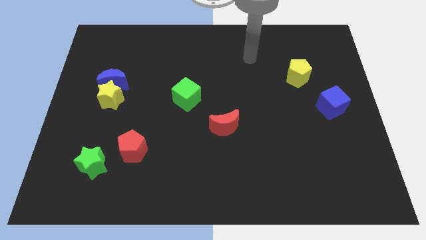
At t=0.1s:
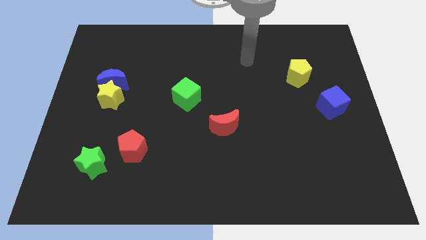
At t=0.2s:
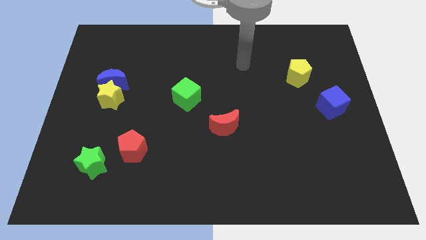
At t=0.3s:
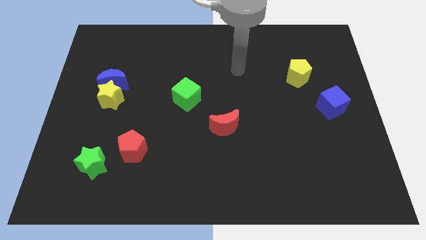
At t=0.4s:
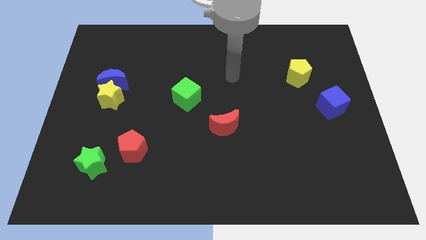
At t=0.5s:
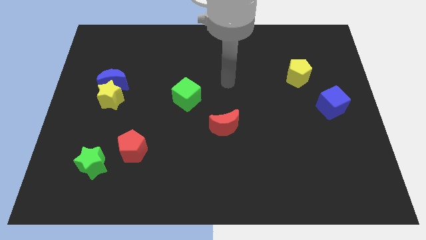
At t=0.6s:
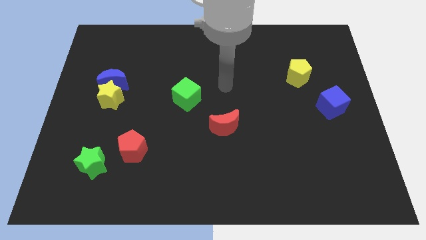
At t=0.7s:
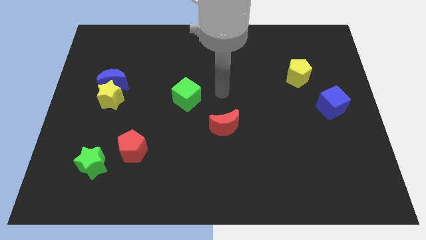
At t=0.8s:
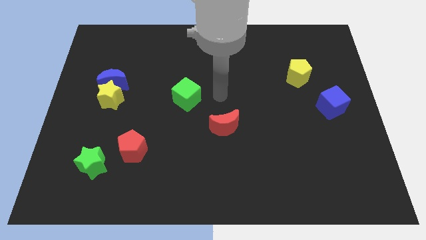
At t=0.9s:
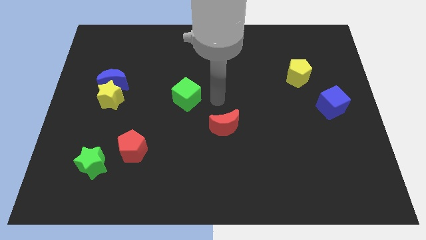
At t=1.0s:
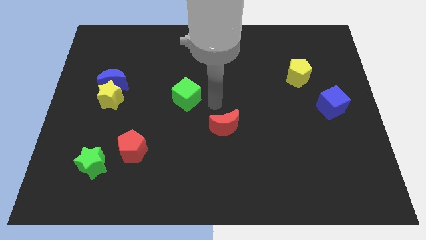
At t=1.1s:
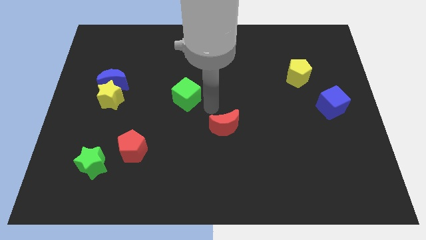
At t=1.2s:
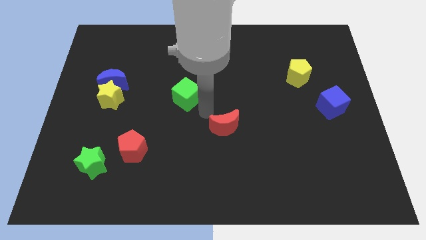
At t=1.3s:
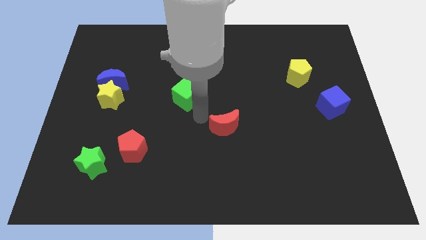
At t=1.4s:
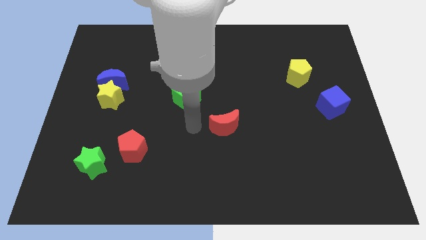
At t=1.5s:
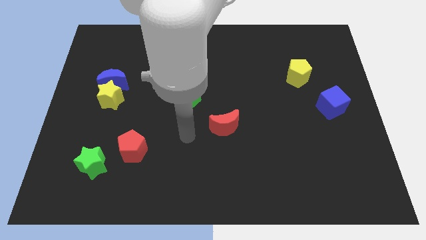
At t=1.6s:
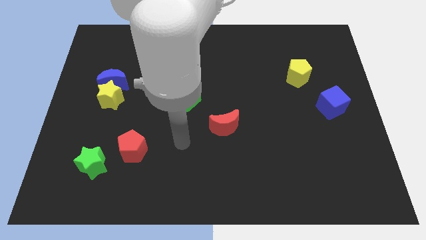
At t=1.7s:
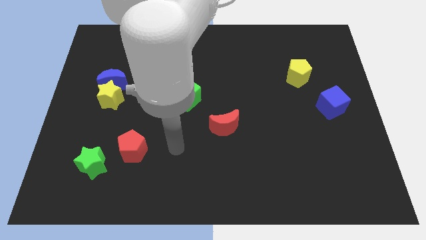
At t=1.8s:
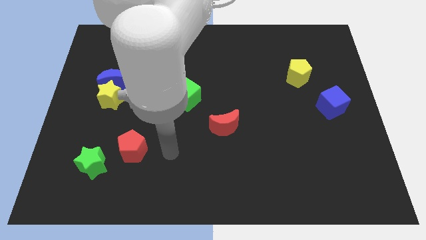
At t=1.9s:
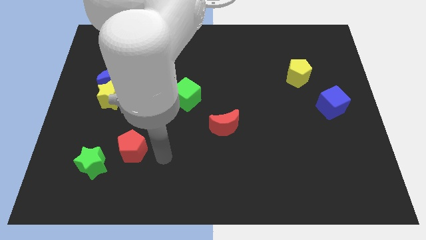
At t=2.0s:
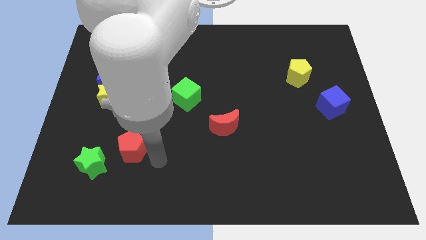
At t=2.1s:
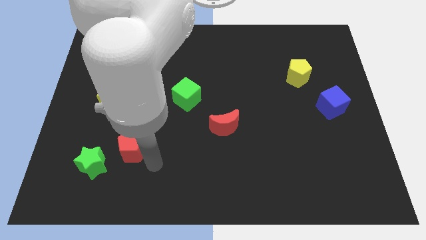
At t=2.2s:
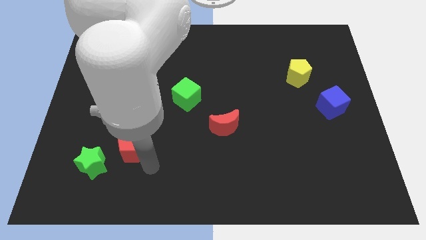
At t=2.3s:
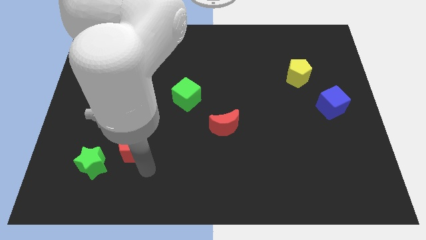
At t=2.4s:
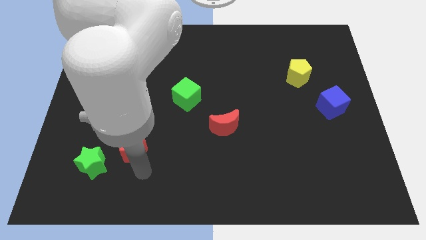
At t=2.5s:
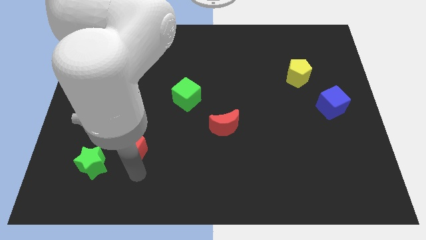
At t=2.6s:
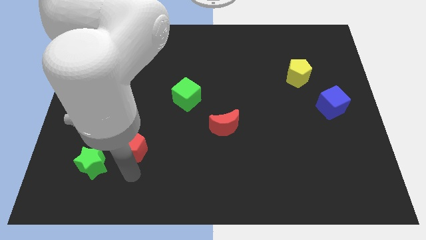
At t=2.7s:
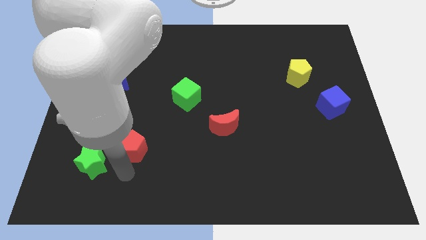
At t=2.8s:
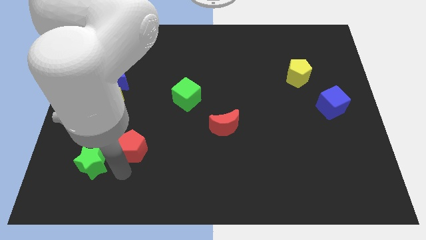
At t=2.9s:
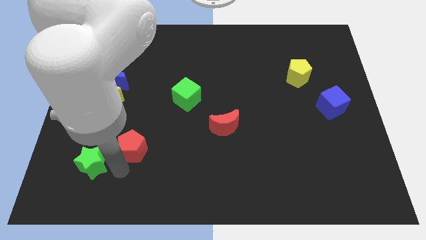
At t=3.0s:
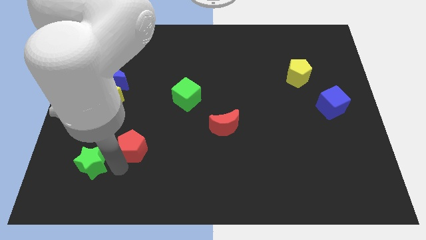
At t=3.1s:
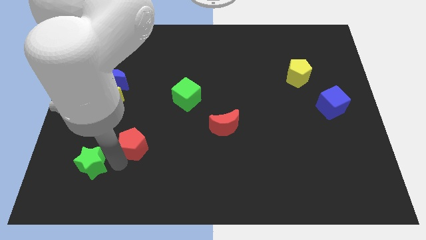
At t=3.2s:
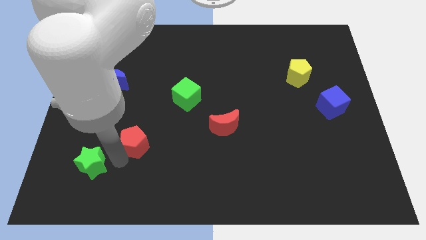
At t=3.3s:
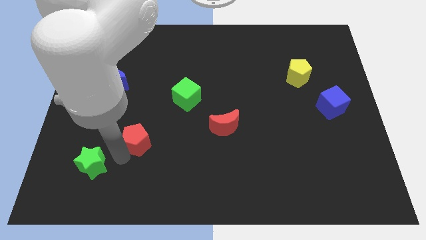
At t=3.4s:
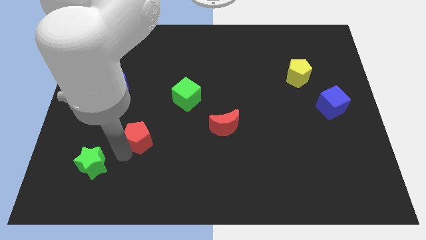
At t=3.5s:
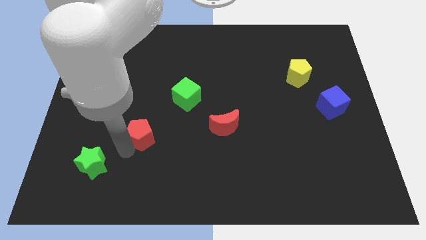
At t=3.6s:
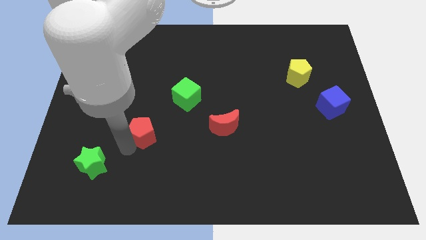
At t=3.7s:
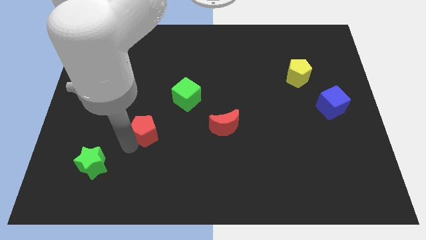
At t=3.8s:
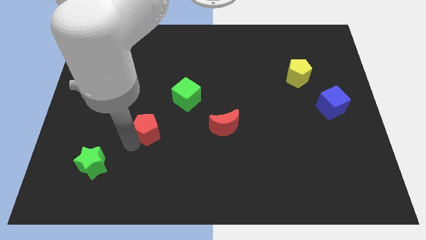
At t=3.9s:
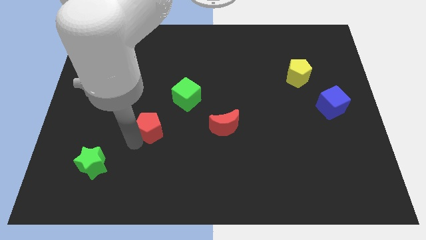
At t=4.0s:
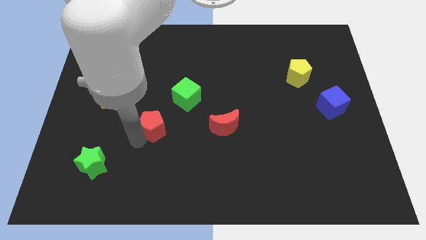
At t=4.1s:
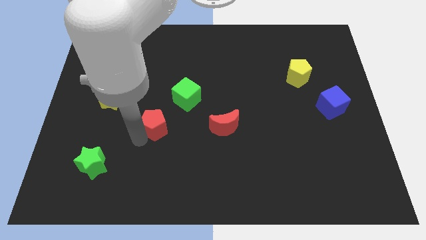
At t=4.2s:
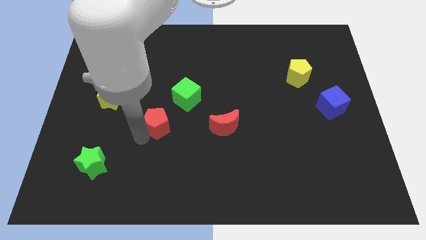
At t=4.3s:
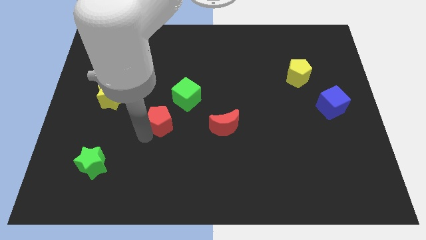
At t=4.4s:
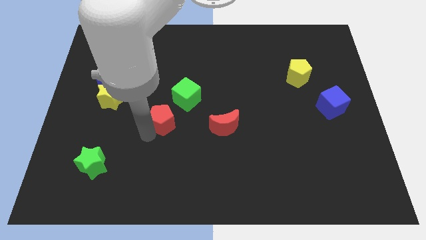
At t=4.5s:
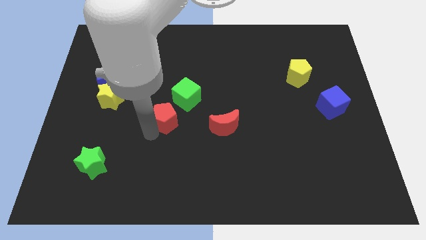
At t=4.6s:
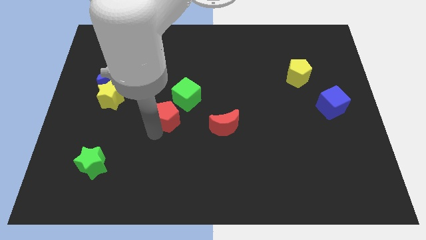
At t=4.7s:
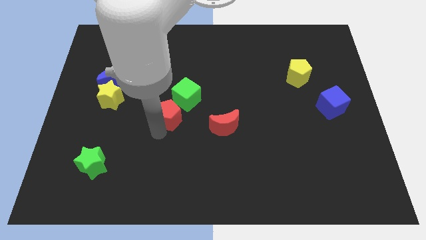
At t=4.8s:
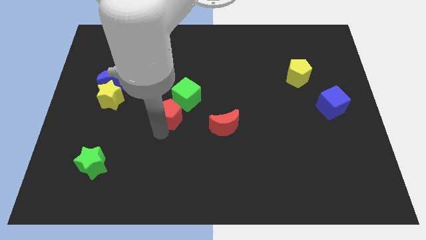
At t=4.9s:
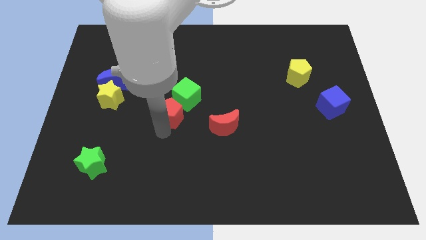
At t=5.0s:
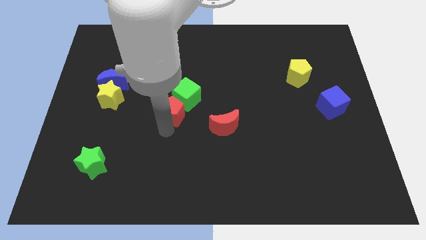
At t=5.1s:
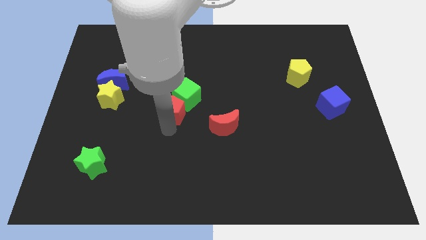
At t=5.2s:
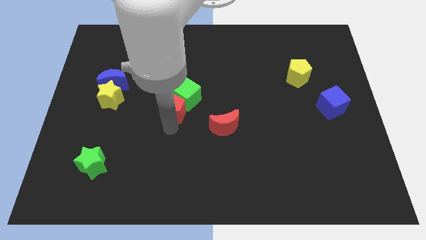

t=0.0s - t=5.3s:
slide the red pentagon next to the green cube

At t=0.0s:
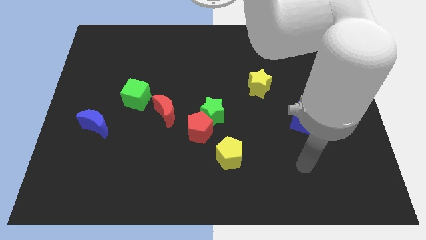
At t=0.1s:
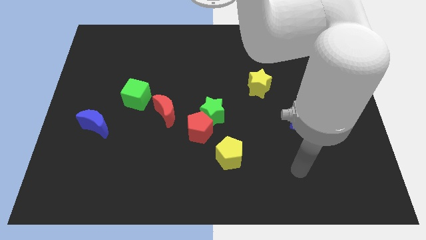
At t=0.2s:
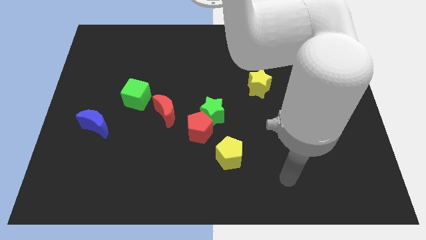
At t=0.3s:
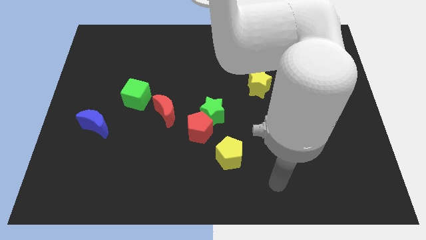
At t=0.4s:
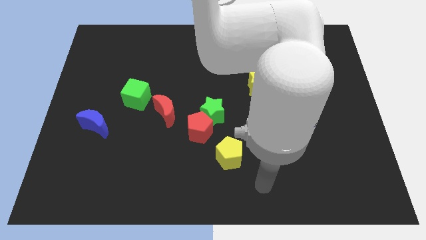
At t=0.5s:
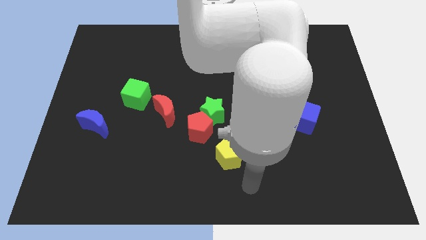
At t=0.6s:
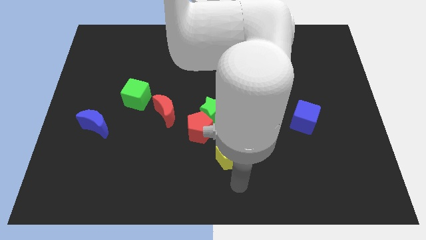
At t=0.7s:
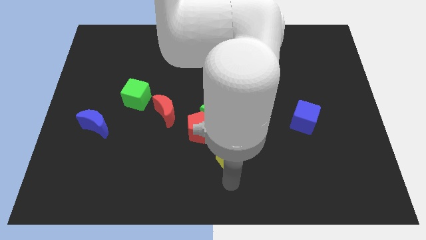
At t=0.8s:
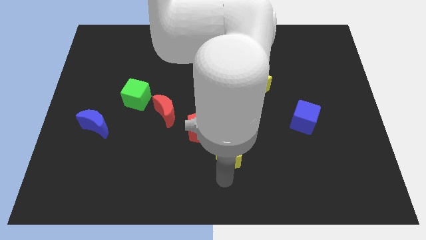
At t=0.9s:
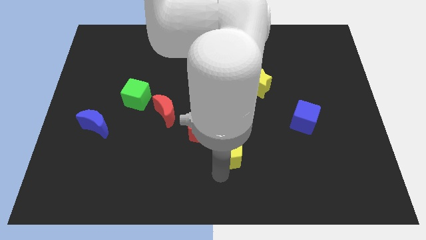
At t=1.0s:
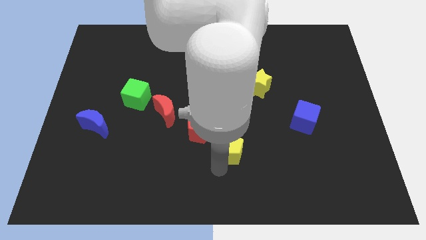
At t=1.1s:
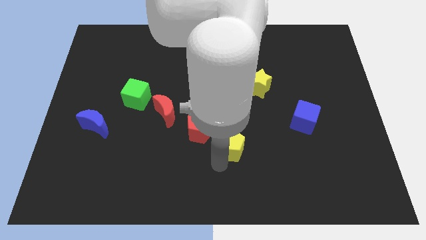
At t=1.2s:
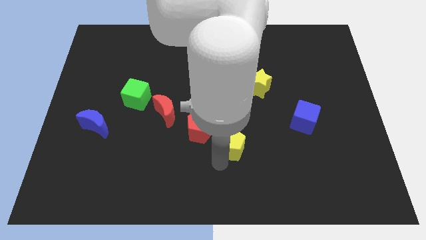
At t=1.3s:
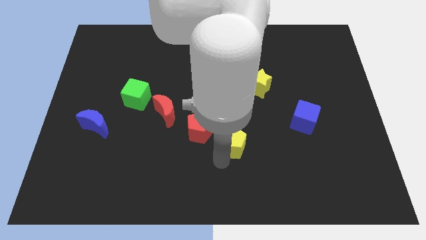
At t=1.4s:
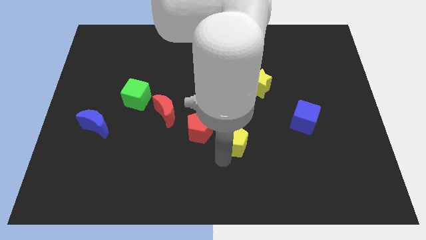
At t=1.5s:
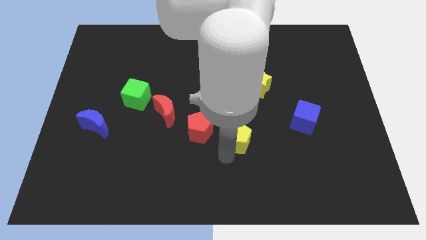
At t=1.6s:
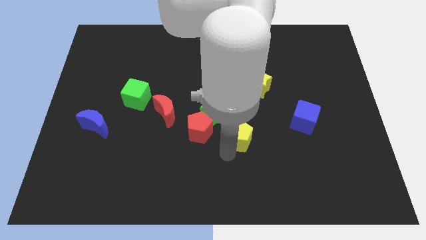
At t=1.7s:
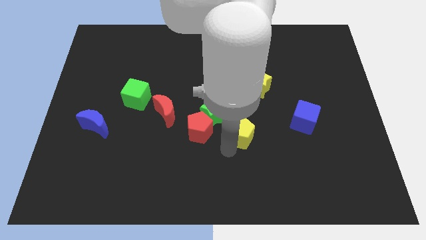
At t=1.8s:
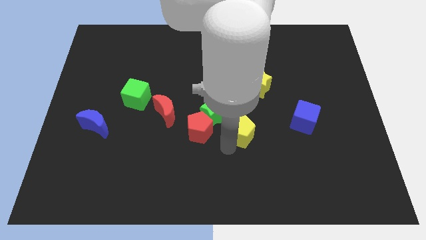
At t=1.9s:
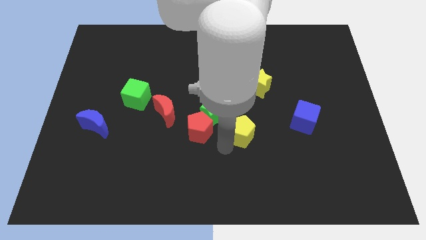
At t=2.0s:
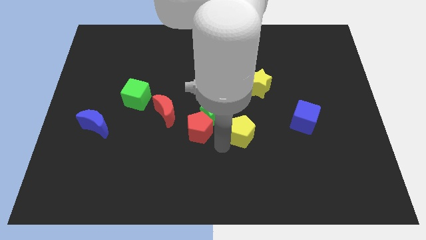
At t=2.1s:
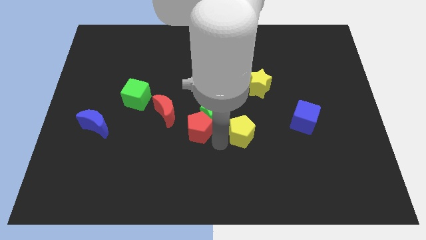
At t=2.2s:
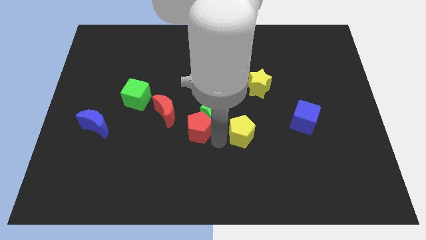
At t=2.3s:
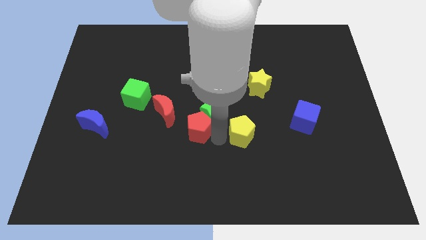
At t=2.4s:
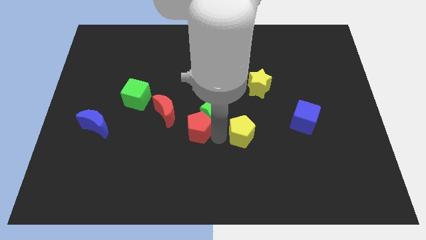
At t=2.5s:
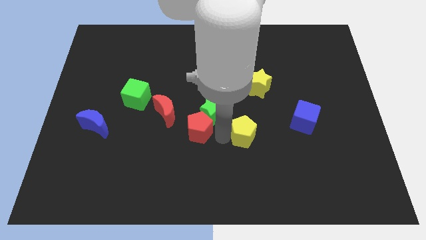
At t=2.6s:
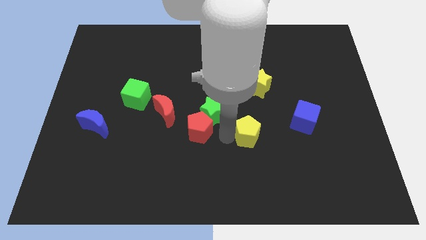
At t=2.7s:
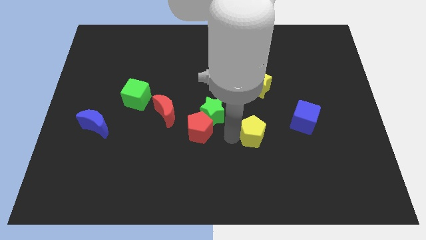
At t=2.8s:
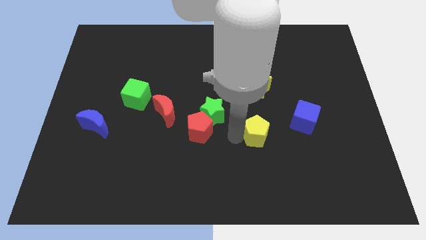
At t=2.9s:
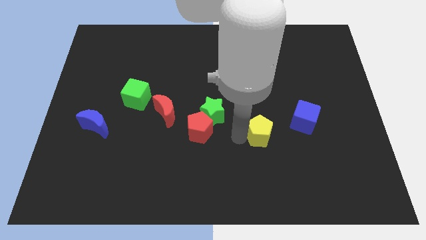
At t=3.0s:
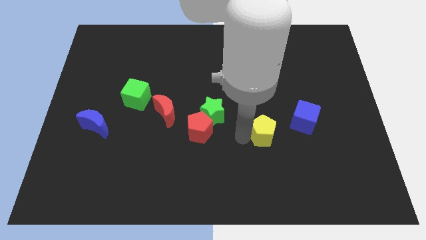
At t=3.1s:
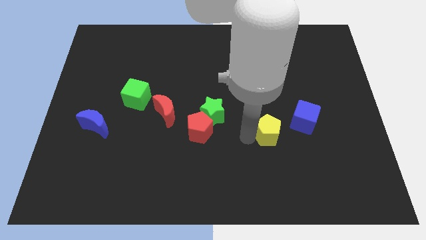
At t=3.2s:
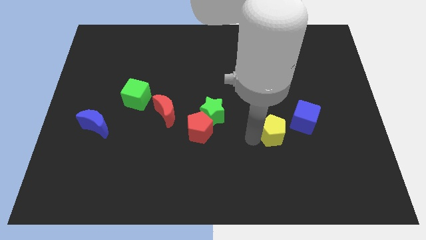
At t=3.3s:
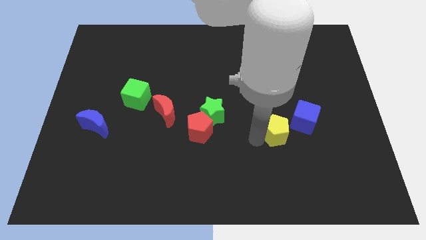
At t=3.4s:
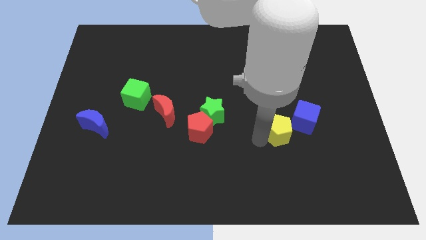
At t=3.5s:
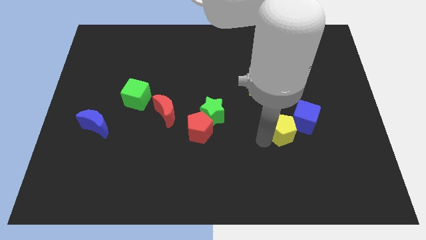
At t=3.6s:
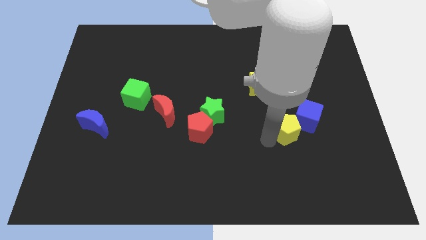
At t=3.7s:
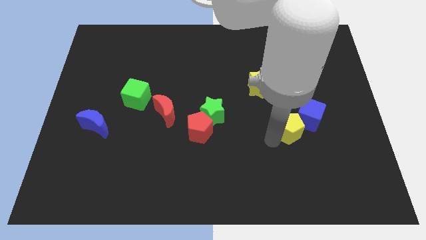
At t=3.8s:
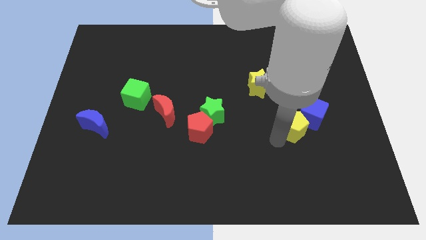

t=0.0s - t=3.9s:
push the yellow pentagon towards the blue cube
